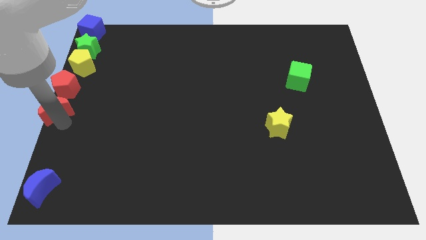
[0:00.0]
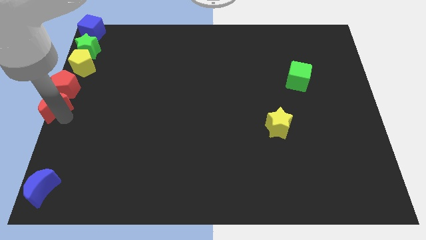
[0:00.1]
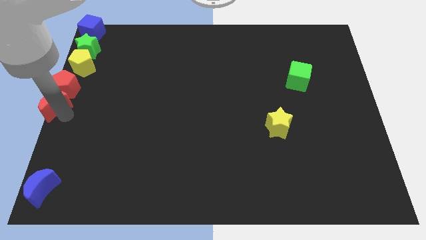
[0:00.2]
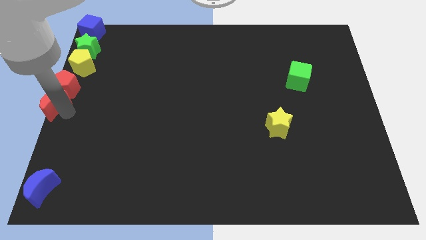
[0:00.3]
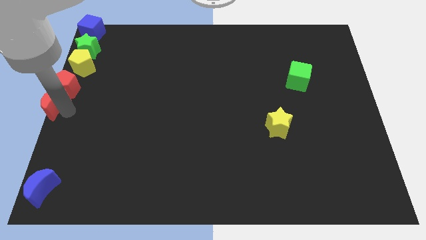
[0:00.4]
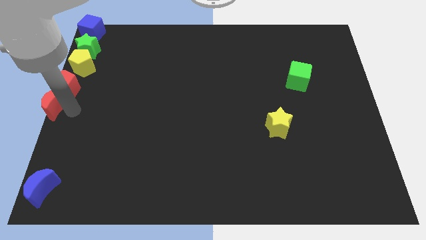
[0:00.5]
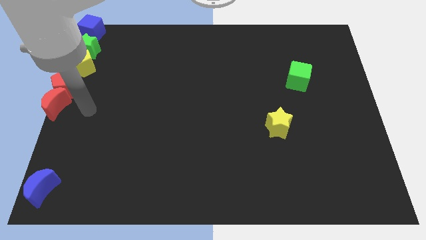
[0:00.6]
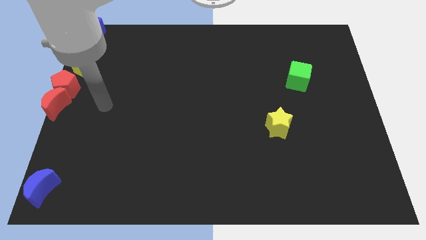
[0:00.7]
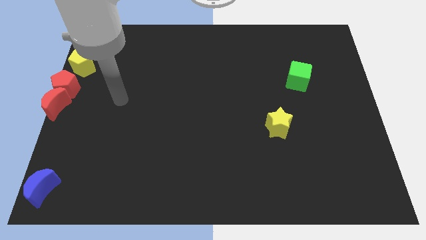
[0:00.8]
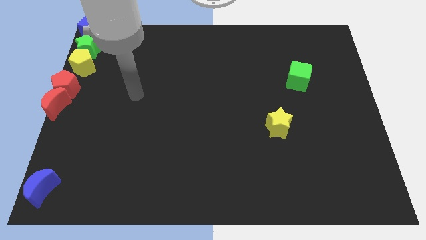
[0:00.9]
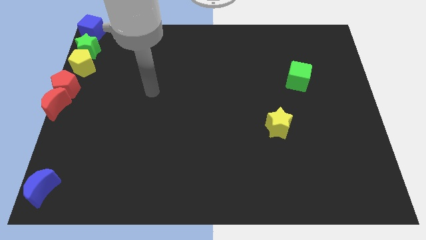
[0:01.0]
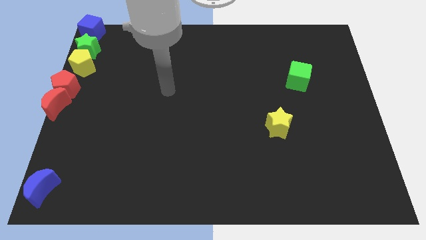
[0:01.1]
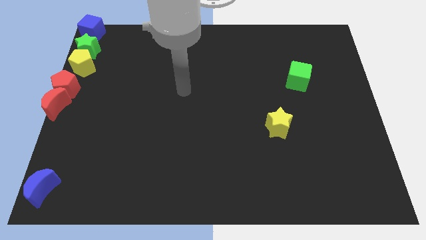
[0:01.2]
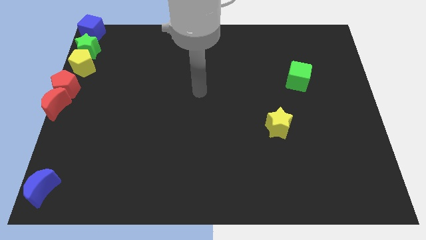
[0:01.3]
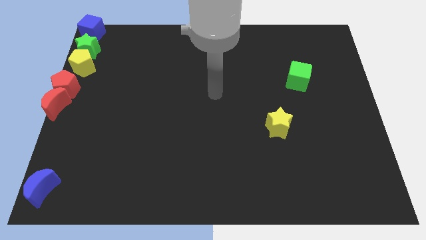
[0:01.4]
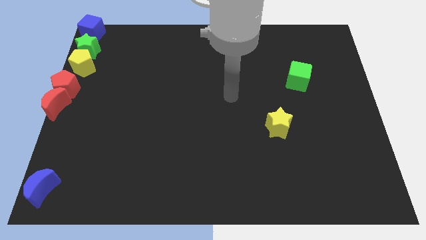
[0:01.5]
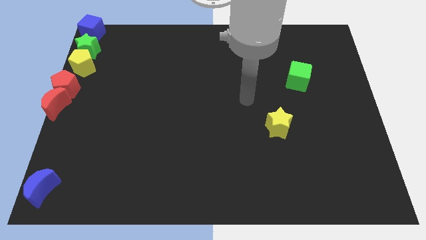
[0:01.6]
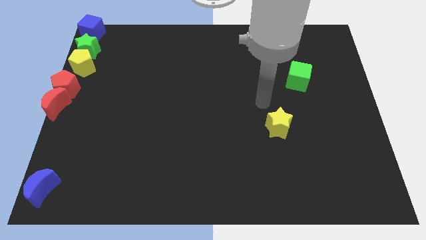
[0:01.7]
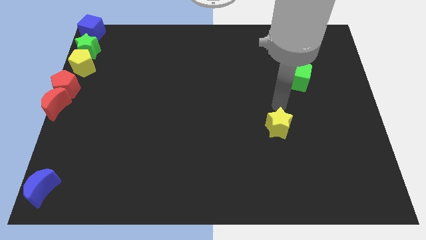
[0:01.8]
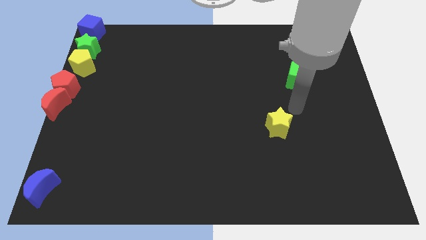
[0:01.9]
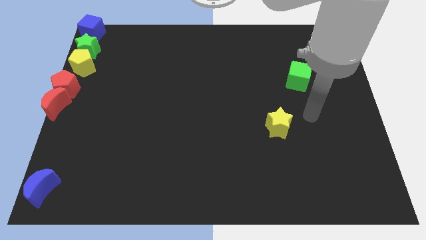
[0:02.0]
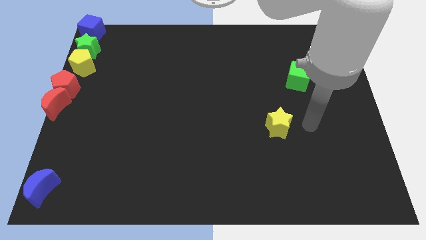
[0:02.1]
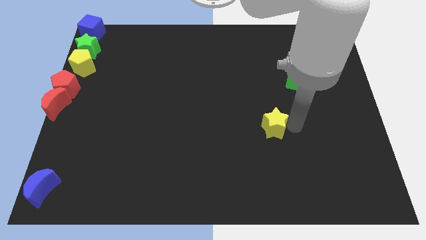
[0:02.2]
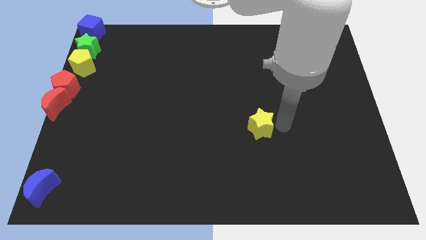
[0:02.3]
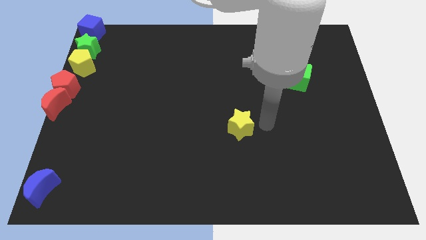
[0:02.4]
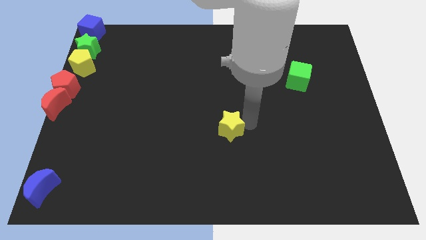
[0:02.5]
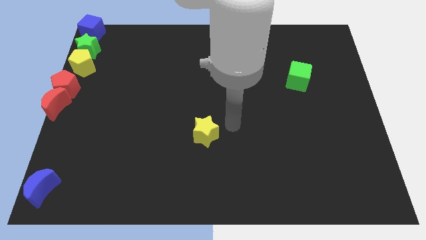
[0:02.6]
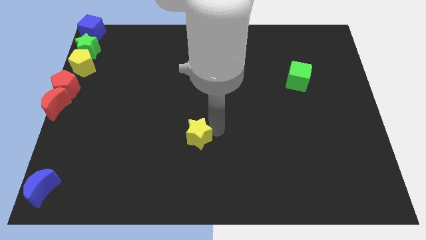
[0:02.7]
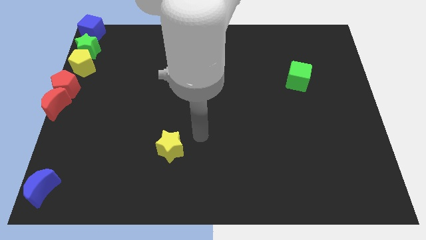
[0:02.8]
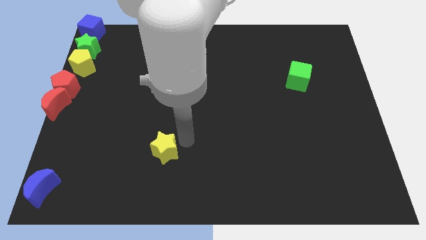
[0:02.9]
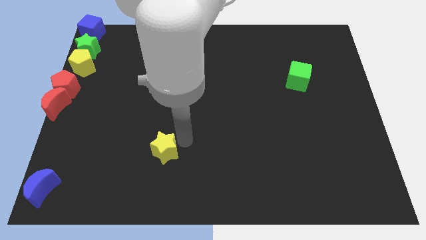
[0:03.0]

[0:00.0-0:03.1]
move yellow star to the left

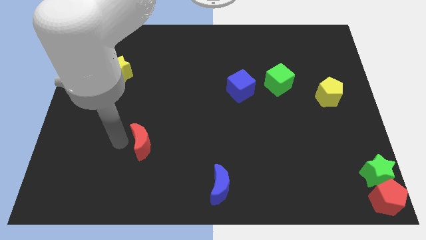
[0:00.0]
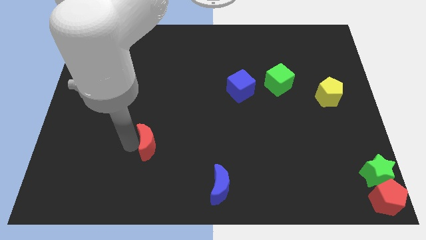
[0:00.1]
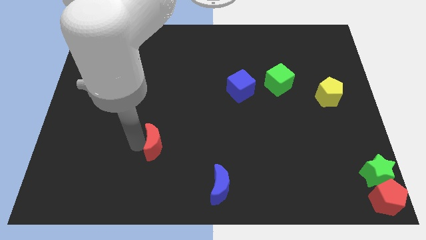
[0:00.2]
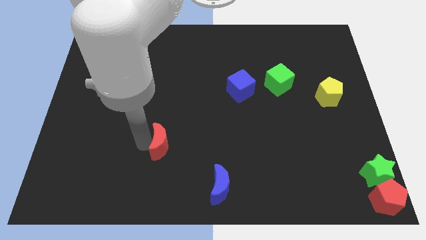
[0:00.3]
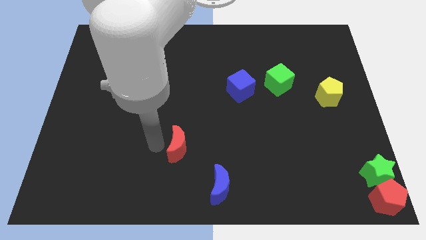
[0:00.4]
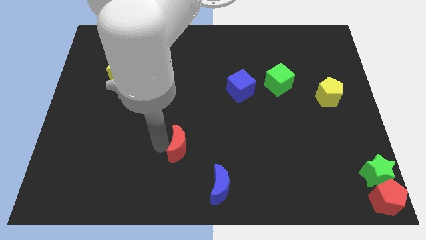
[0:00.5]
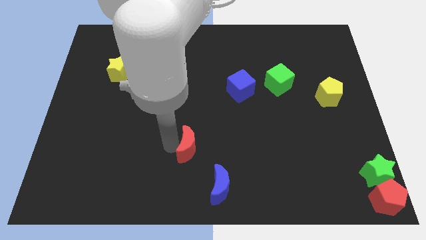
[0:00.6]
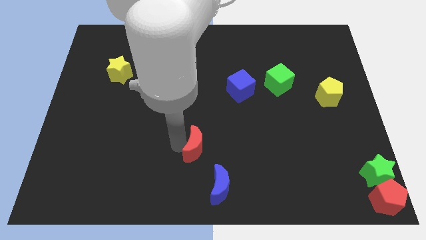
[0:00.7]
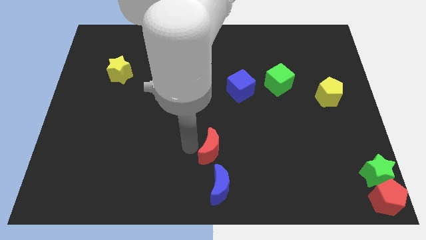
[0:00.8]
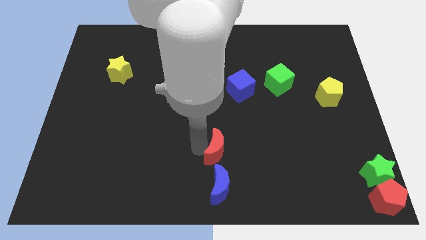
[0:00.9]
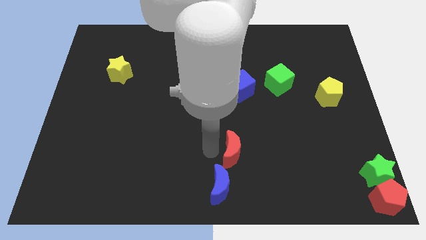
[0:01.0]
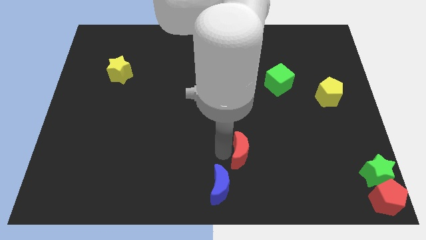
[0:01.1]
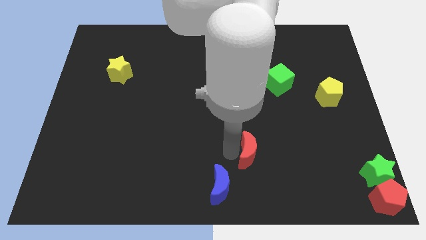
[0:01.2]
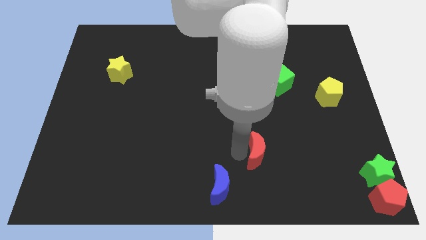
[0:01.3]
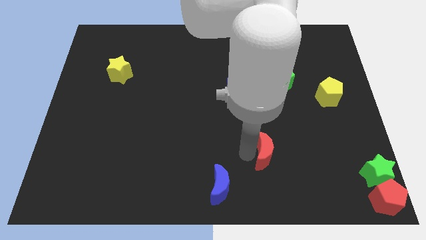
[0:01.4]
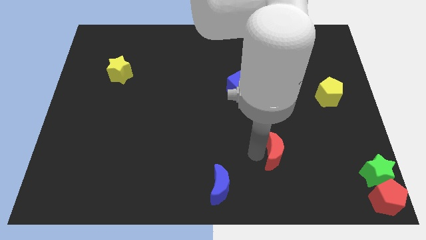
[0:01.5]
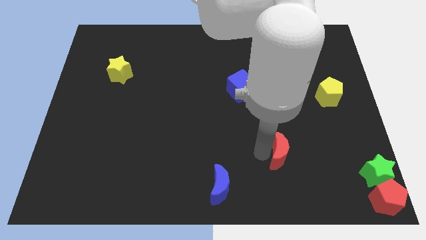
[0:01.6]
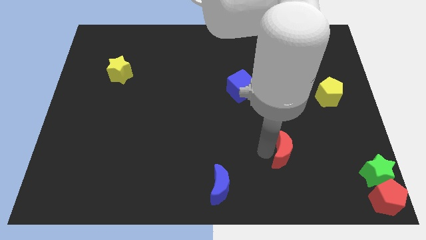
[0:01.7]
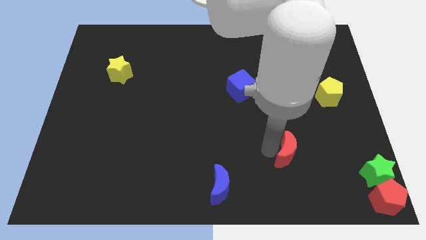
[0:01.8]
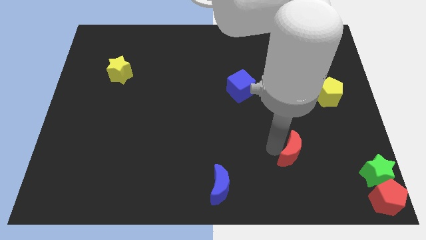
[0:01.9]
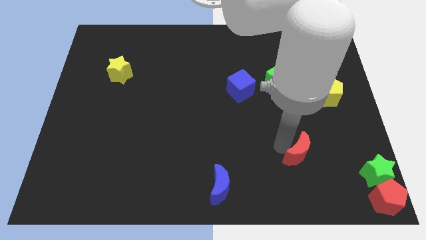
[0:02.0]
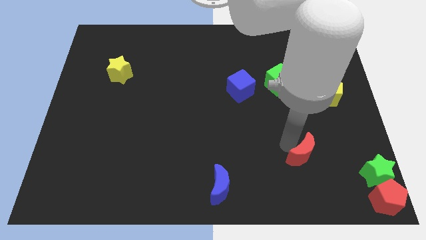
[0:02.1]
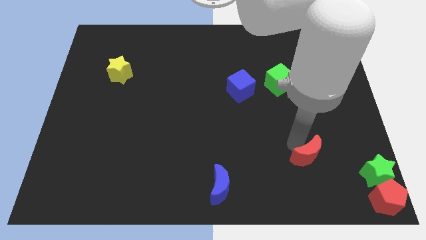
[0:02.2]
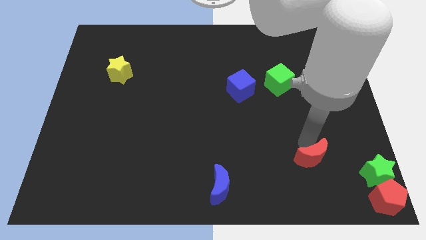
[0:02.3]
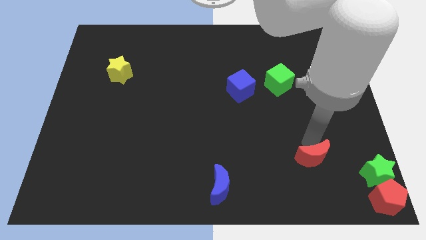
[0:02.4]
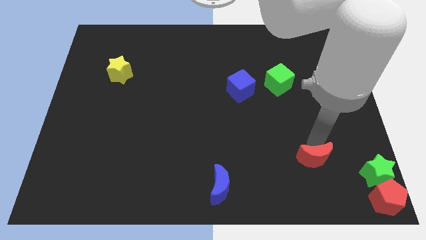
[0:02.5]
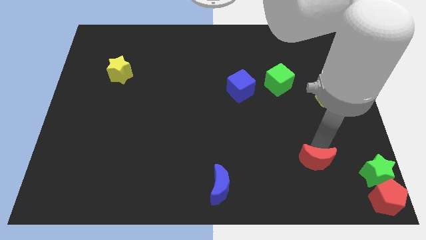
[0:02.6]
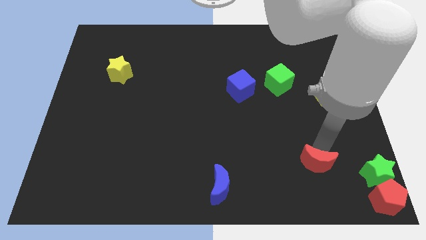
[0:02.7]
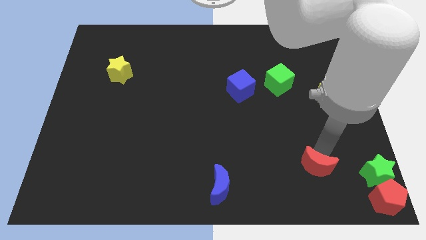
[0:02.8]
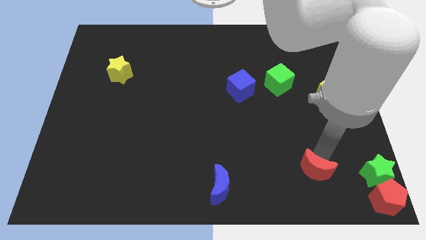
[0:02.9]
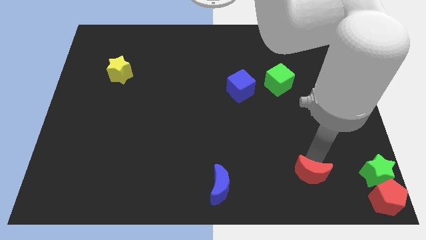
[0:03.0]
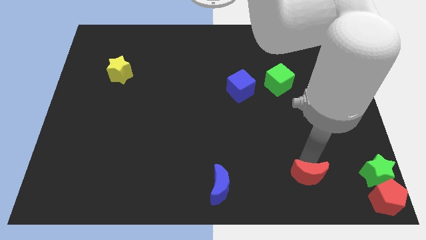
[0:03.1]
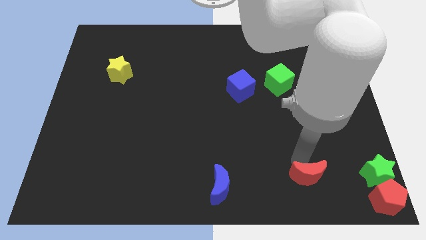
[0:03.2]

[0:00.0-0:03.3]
push the red crescent to the left of the green star

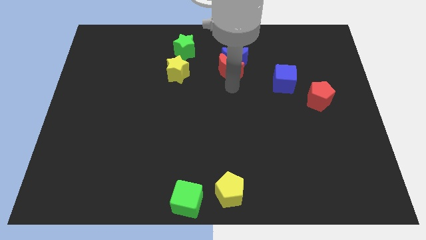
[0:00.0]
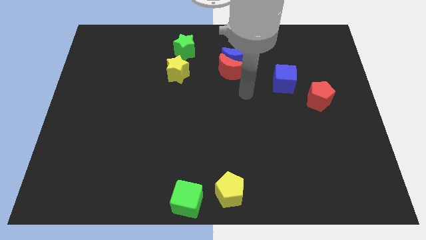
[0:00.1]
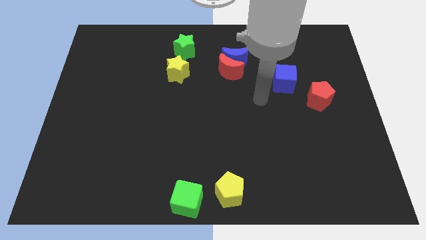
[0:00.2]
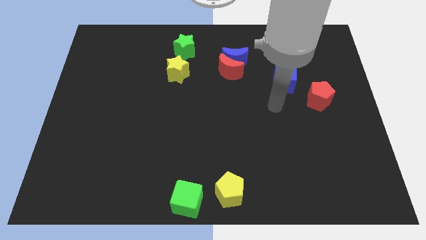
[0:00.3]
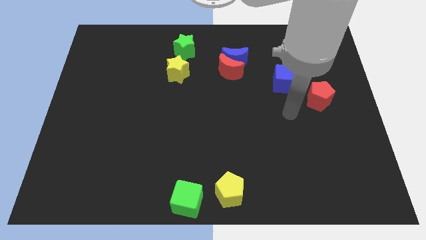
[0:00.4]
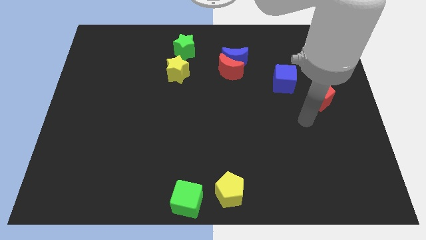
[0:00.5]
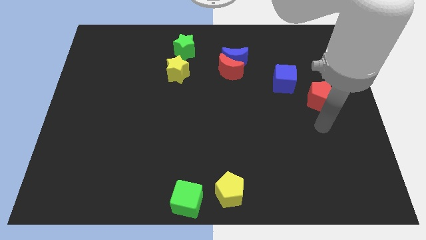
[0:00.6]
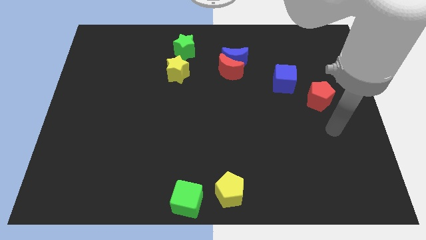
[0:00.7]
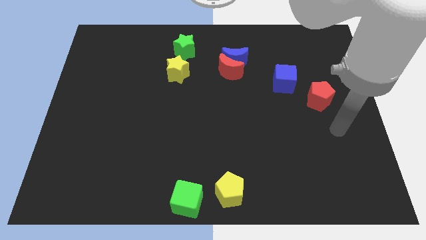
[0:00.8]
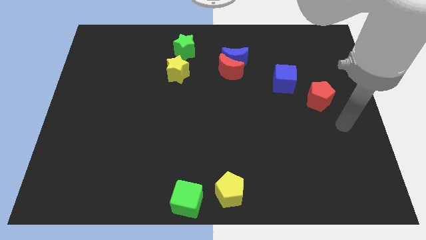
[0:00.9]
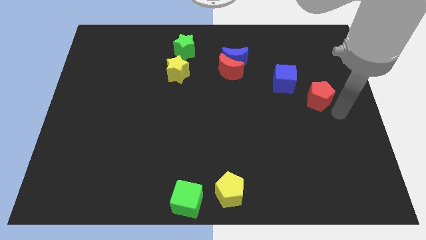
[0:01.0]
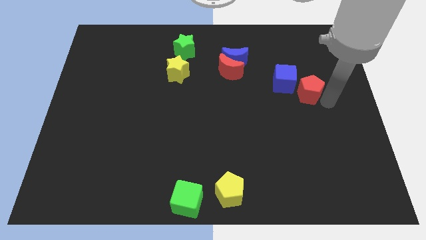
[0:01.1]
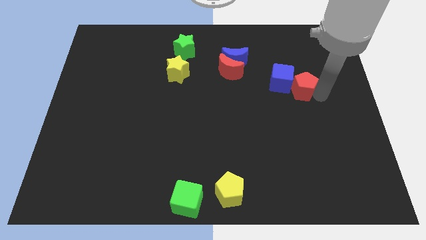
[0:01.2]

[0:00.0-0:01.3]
push the red pentagon into the blue cube

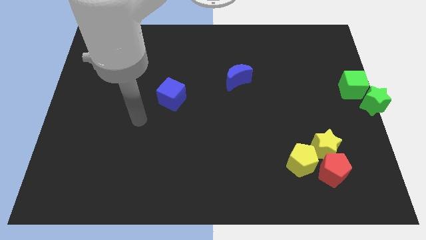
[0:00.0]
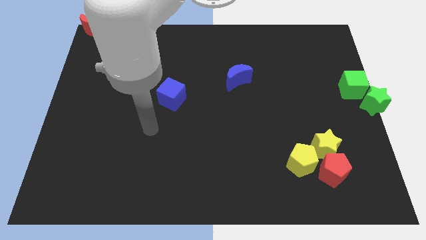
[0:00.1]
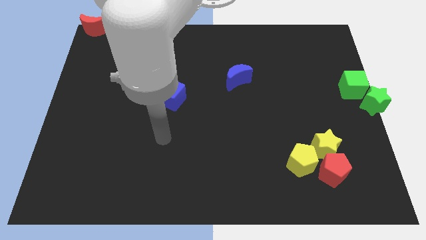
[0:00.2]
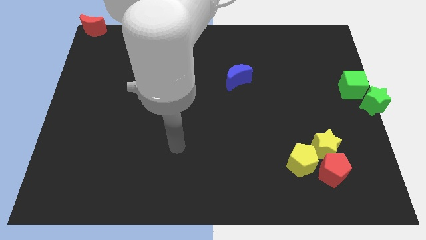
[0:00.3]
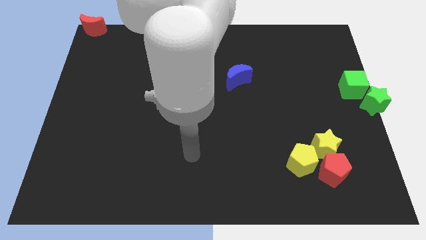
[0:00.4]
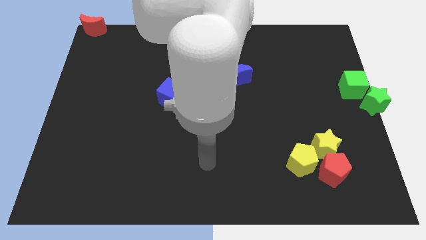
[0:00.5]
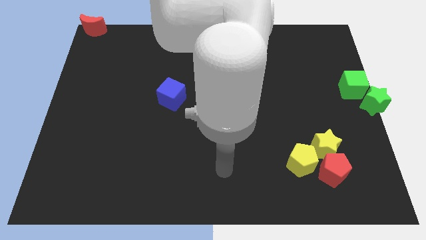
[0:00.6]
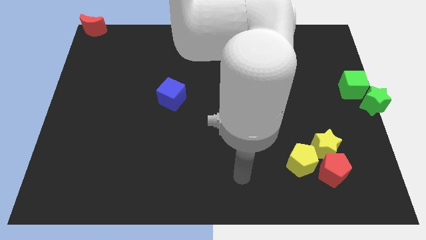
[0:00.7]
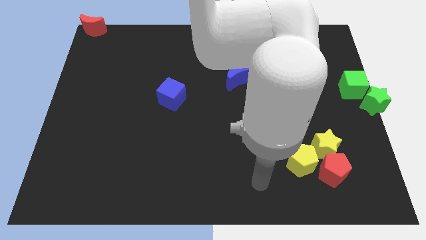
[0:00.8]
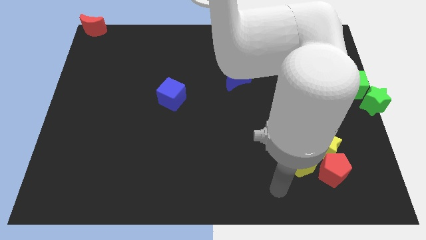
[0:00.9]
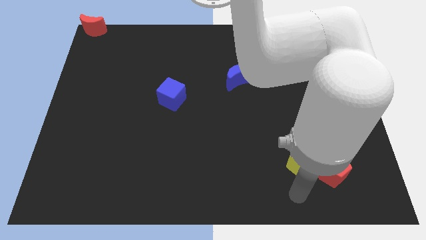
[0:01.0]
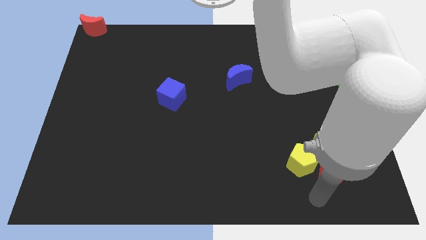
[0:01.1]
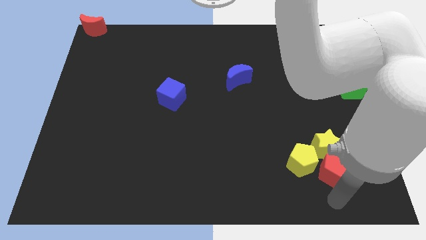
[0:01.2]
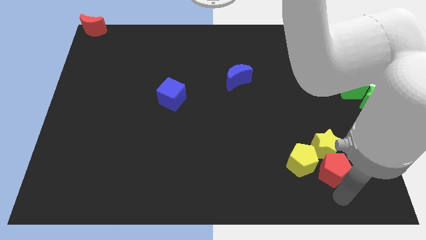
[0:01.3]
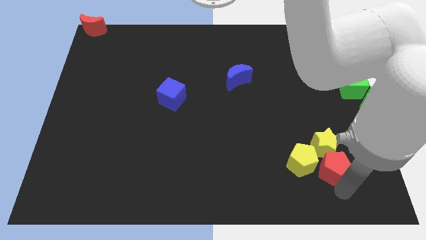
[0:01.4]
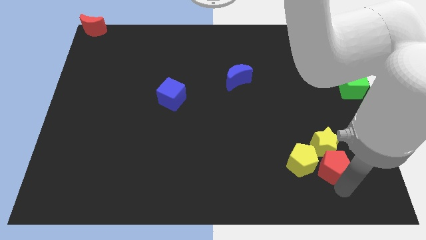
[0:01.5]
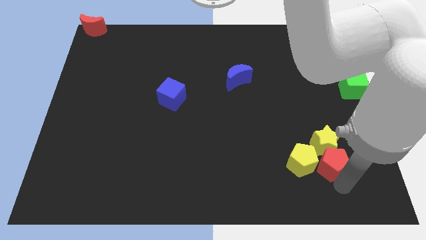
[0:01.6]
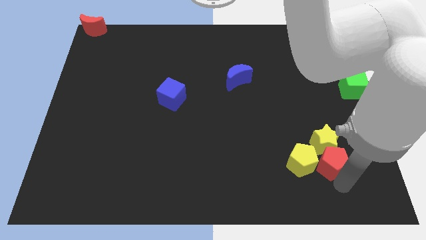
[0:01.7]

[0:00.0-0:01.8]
move the arm towards the red pentagon at the bottom right of the board
